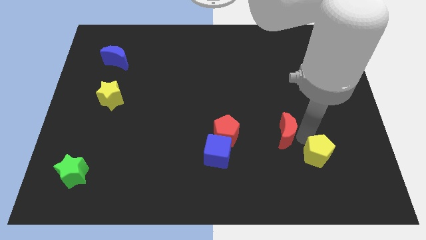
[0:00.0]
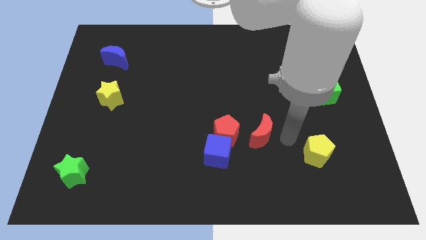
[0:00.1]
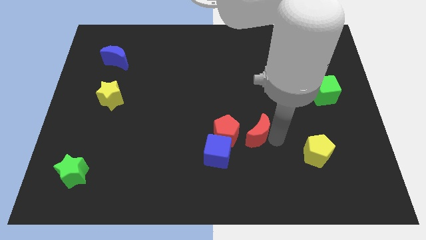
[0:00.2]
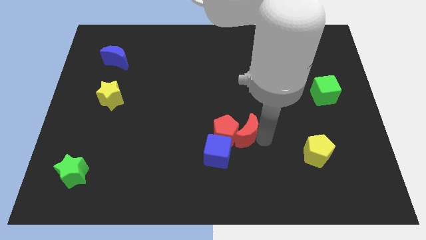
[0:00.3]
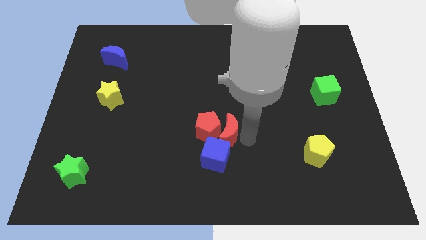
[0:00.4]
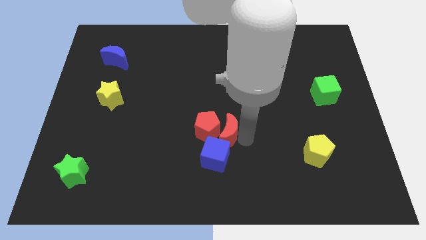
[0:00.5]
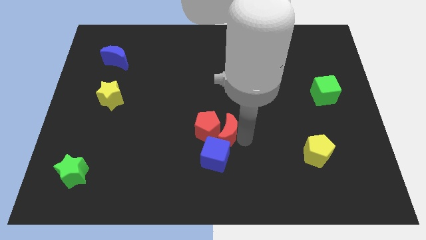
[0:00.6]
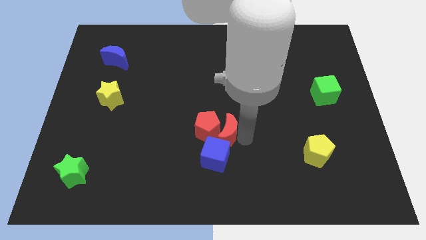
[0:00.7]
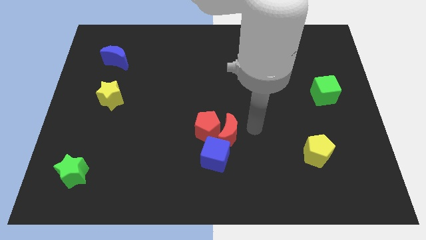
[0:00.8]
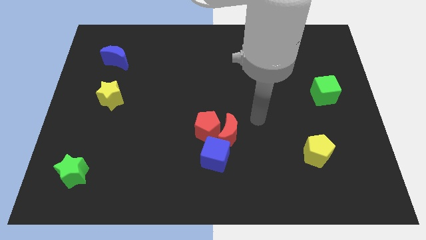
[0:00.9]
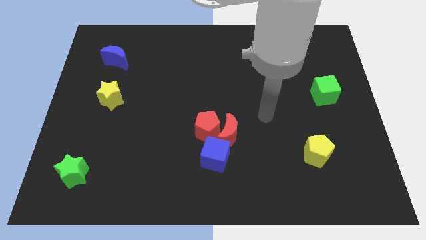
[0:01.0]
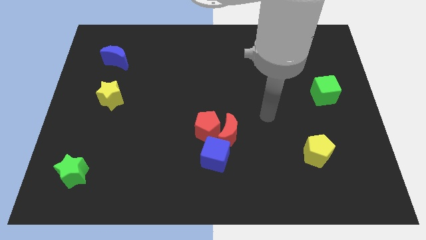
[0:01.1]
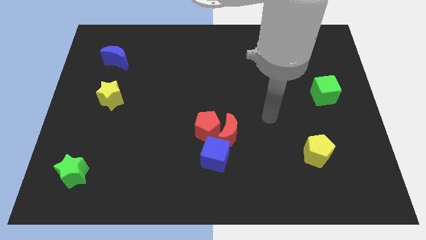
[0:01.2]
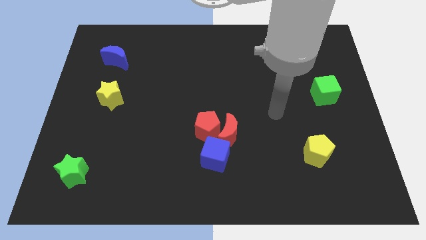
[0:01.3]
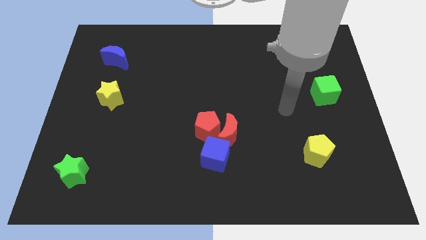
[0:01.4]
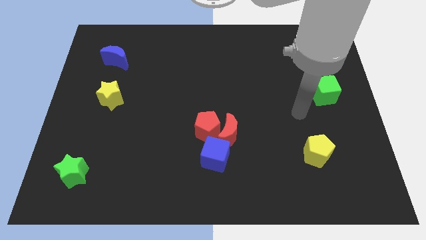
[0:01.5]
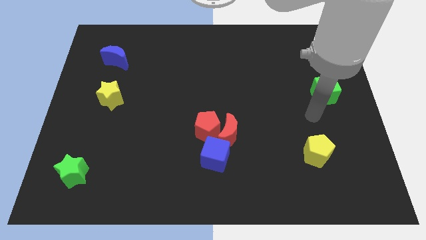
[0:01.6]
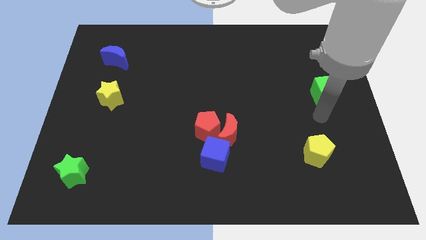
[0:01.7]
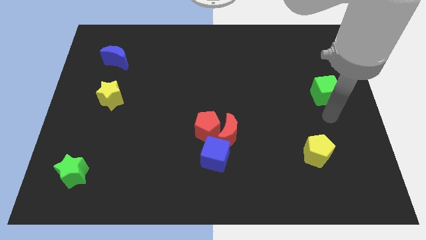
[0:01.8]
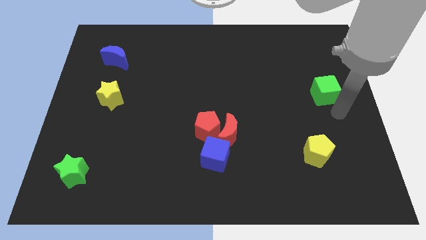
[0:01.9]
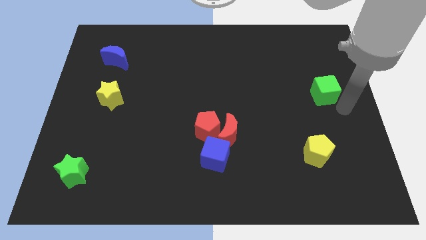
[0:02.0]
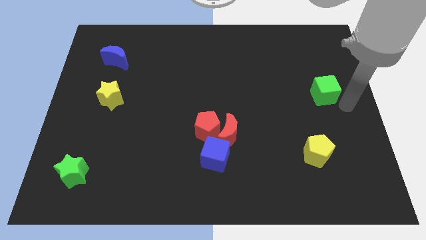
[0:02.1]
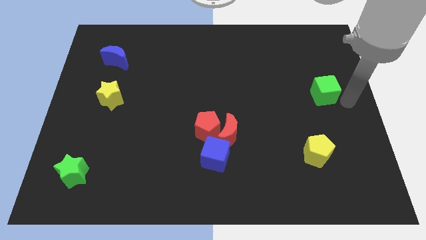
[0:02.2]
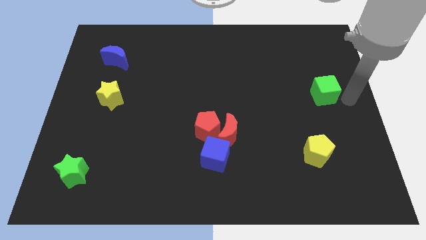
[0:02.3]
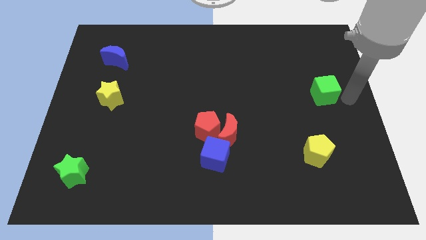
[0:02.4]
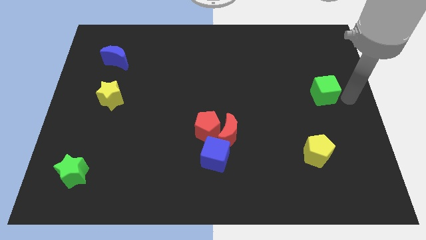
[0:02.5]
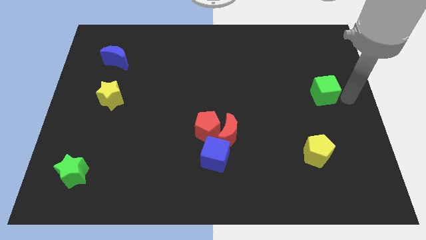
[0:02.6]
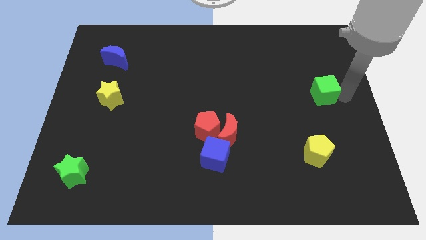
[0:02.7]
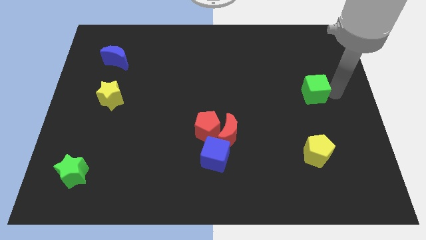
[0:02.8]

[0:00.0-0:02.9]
push the red crescent into the red pentagon

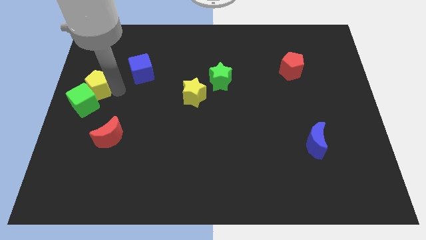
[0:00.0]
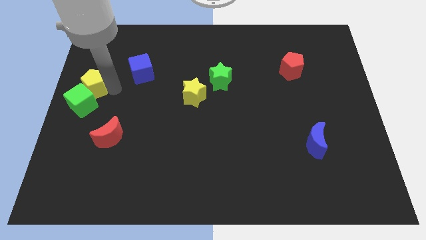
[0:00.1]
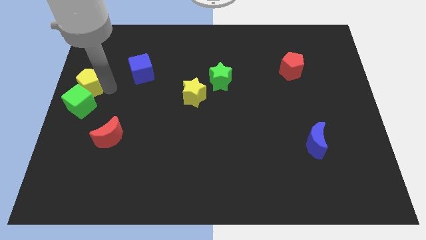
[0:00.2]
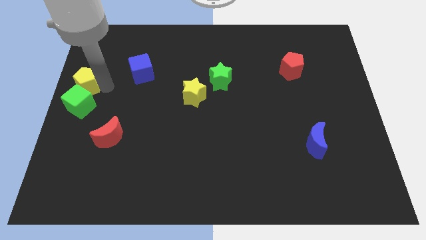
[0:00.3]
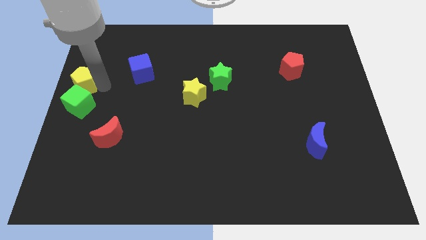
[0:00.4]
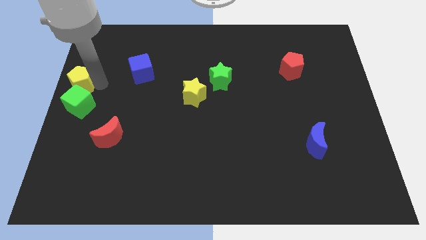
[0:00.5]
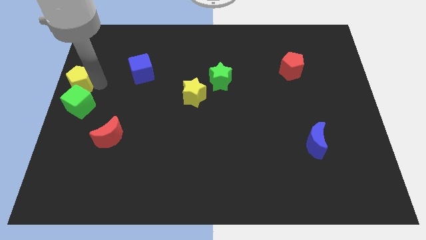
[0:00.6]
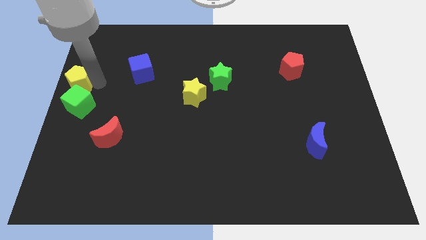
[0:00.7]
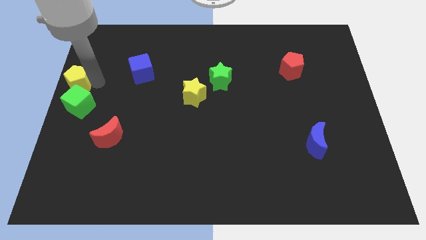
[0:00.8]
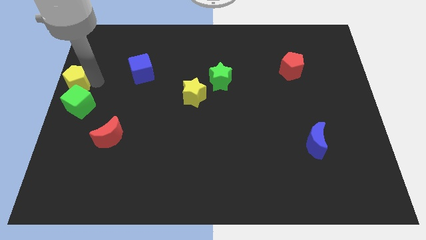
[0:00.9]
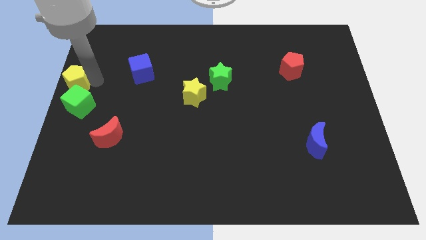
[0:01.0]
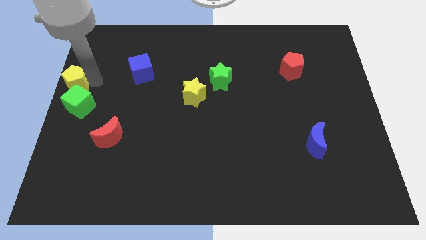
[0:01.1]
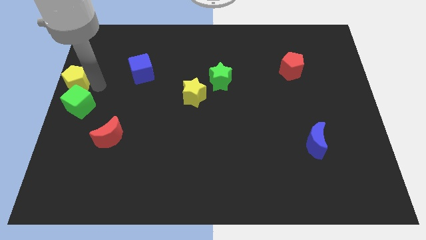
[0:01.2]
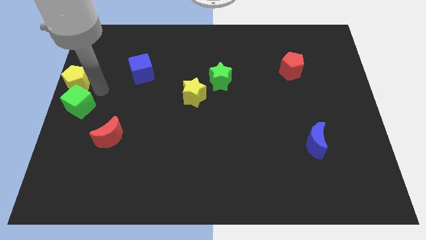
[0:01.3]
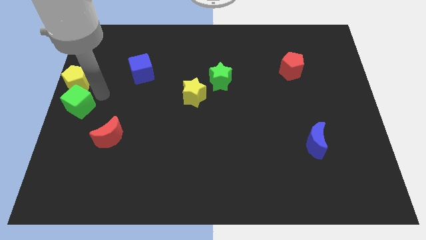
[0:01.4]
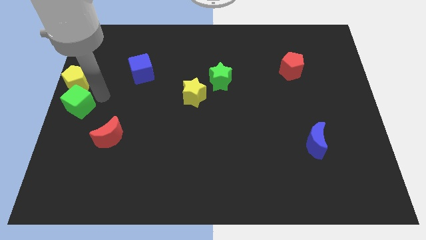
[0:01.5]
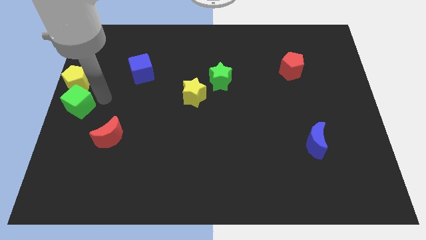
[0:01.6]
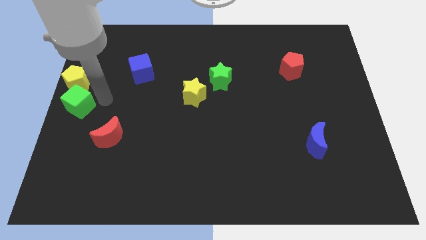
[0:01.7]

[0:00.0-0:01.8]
move yellow pentagon towards the top left corner of the board

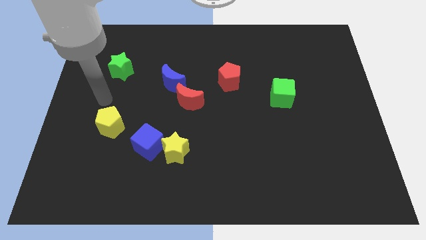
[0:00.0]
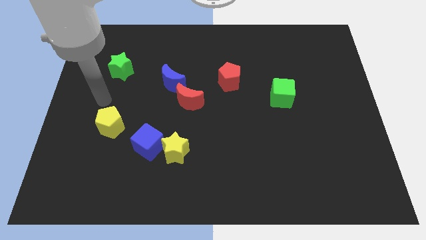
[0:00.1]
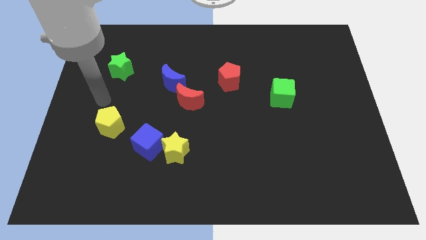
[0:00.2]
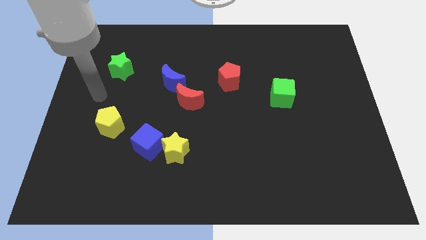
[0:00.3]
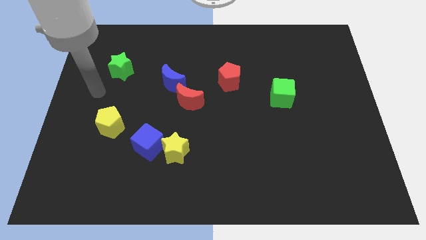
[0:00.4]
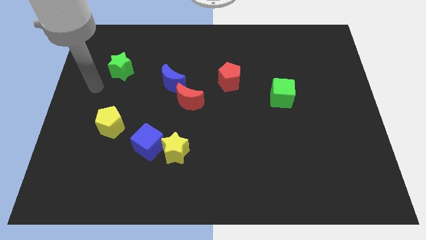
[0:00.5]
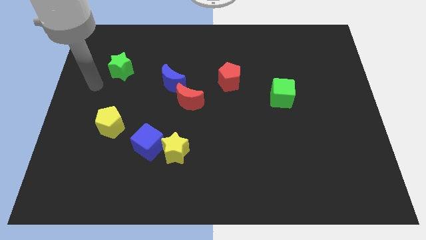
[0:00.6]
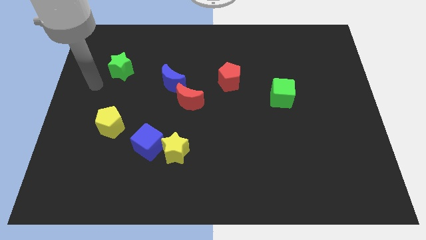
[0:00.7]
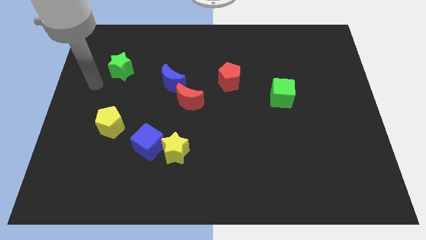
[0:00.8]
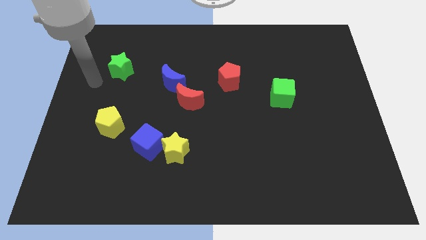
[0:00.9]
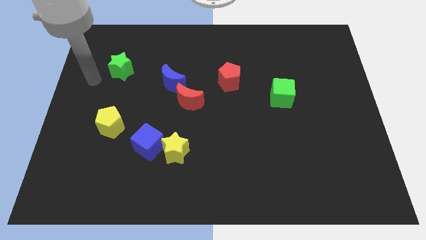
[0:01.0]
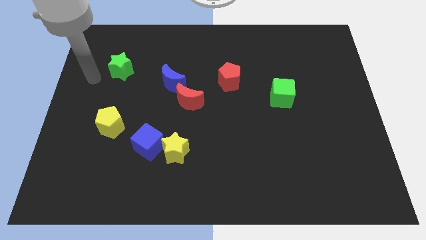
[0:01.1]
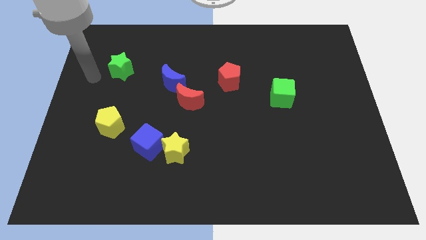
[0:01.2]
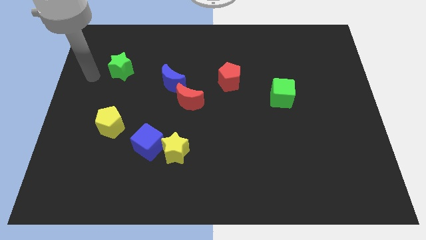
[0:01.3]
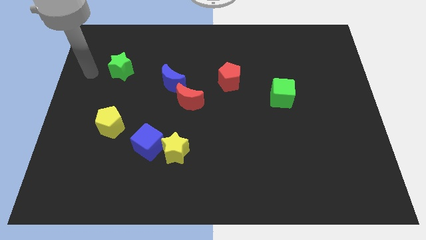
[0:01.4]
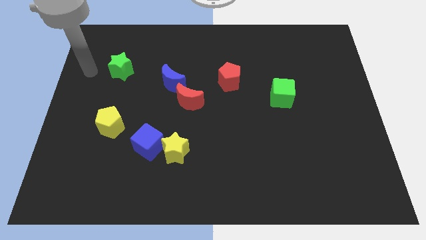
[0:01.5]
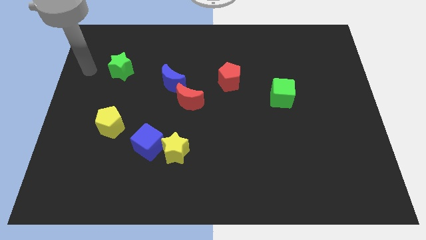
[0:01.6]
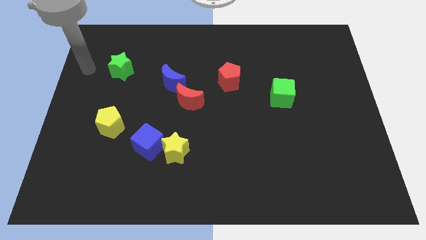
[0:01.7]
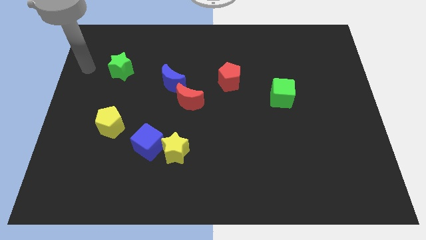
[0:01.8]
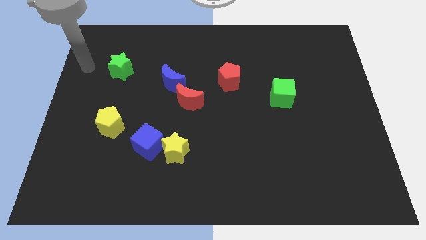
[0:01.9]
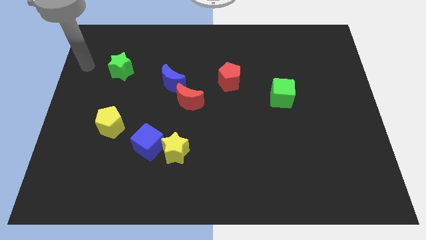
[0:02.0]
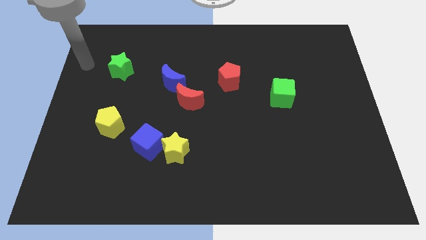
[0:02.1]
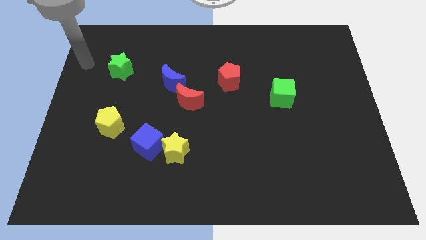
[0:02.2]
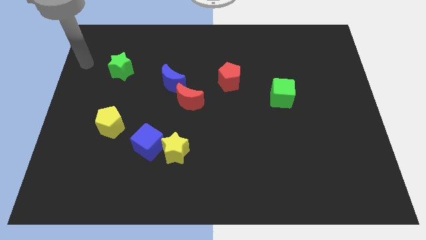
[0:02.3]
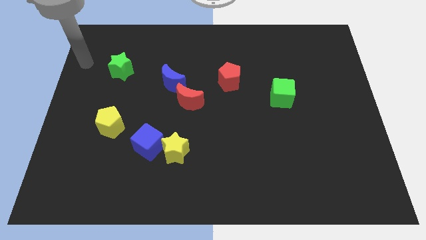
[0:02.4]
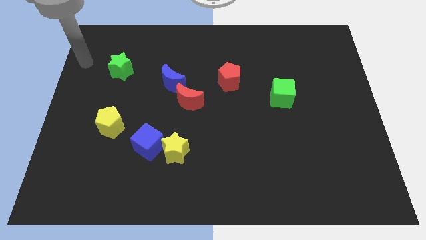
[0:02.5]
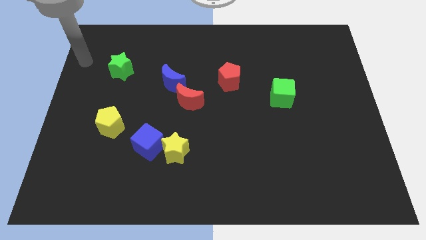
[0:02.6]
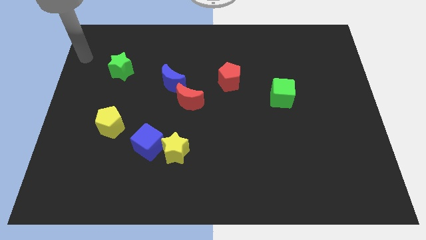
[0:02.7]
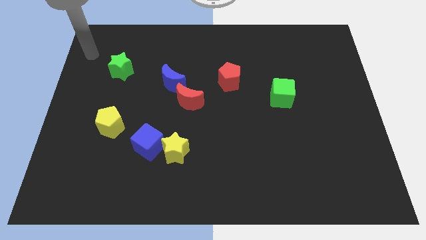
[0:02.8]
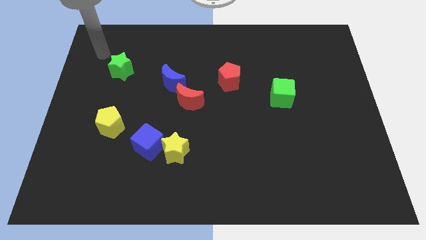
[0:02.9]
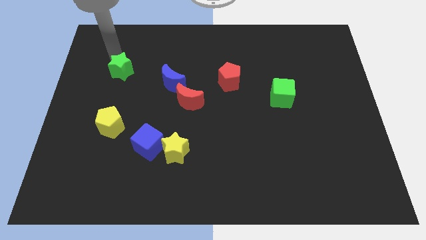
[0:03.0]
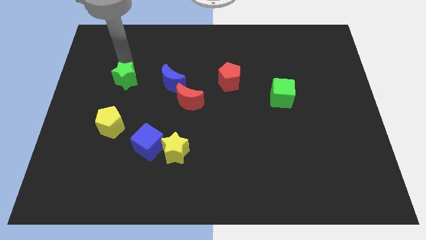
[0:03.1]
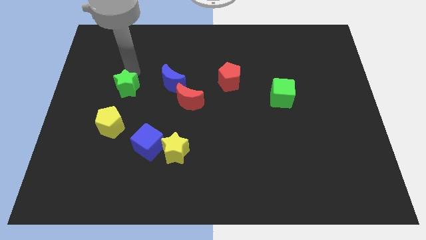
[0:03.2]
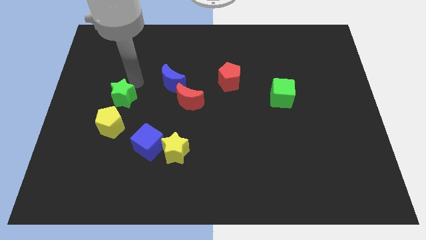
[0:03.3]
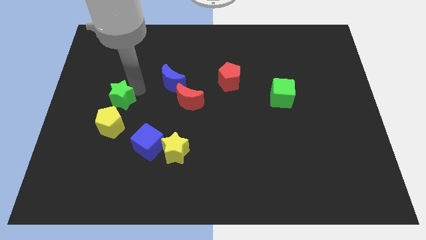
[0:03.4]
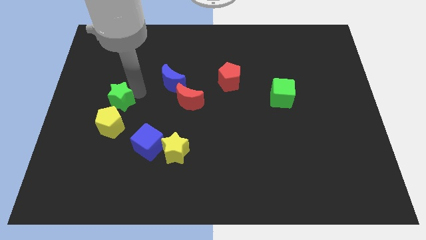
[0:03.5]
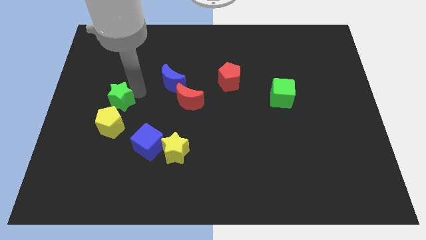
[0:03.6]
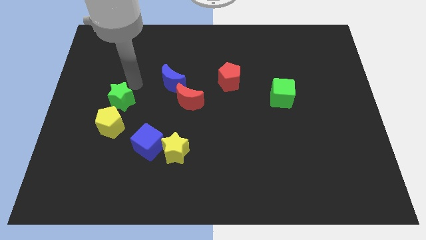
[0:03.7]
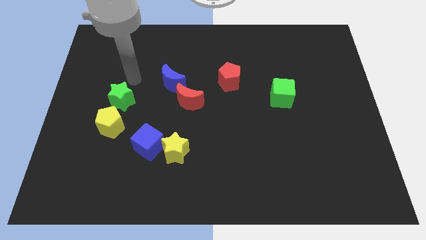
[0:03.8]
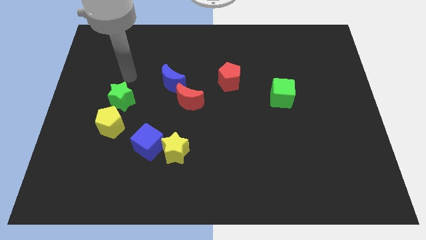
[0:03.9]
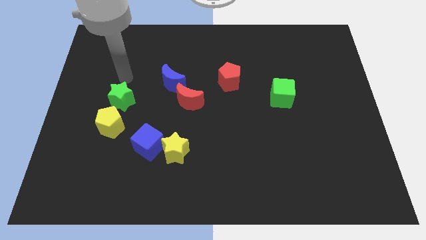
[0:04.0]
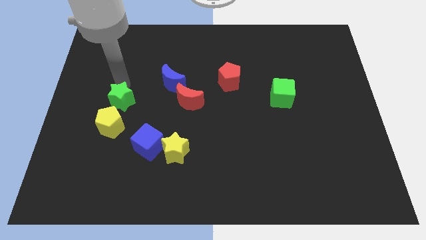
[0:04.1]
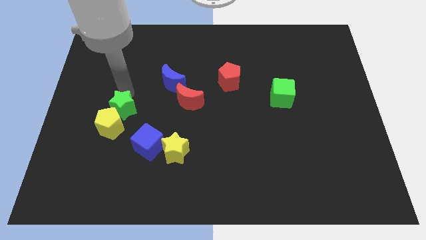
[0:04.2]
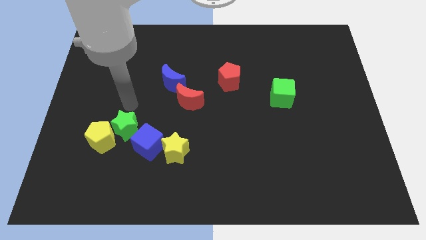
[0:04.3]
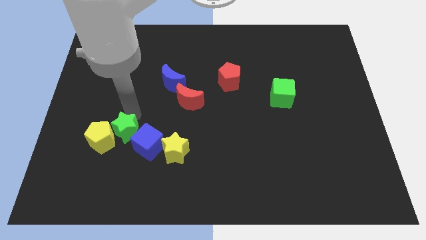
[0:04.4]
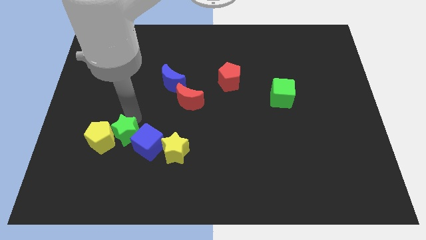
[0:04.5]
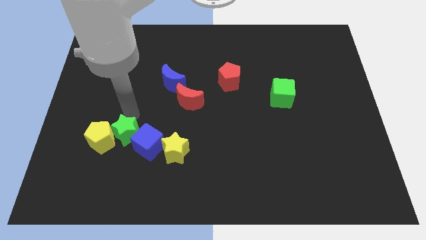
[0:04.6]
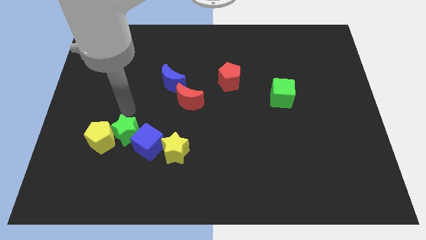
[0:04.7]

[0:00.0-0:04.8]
push the green star into the yellow pentagon
